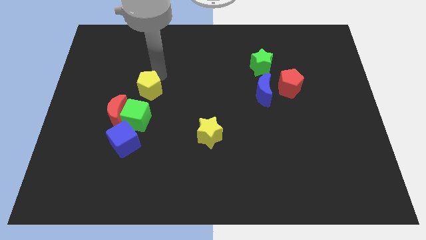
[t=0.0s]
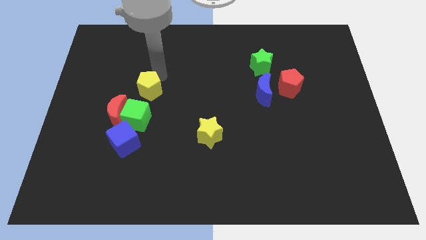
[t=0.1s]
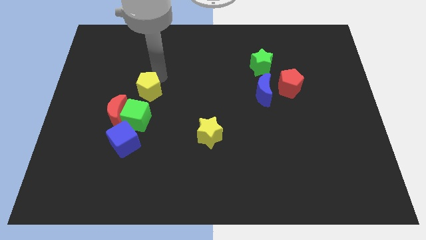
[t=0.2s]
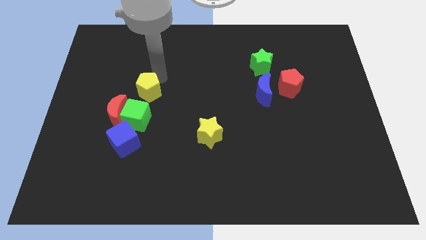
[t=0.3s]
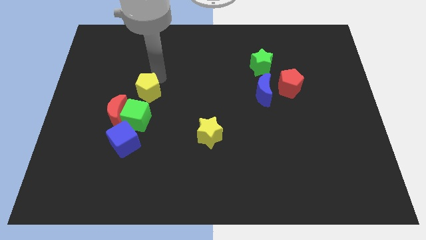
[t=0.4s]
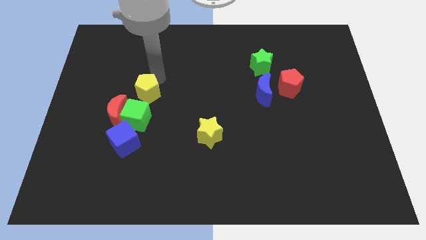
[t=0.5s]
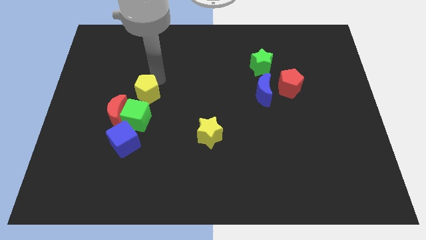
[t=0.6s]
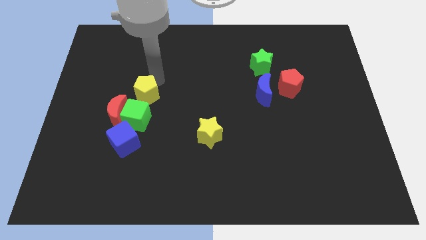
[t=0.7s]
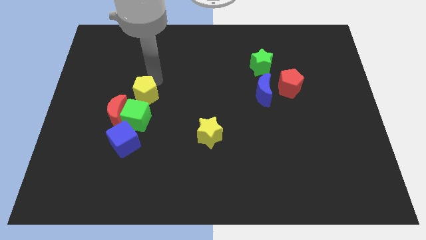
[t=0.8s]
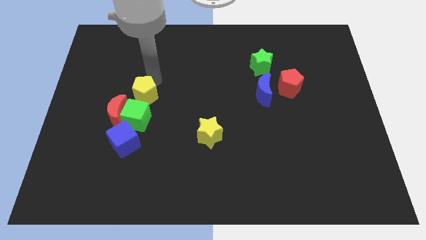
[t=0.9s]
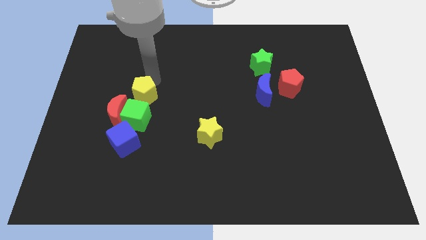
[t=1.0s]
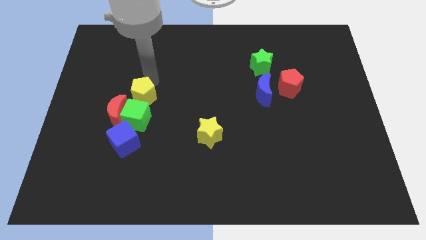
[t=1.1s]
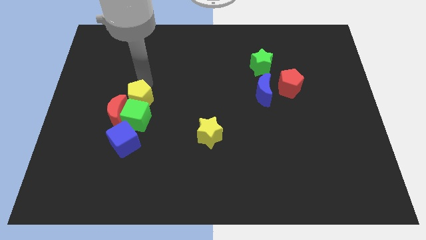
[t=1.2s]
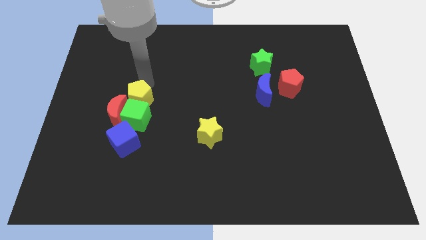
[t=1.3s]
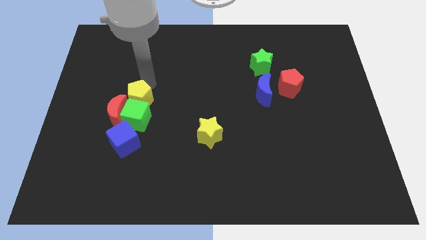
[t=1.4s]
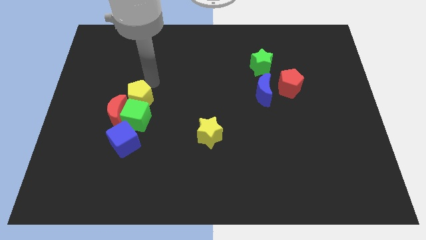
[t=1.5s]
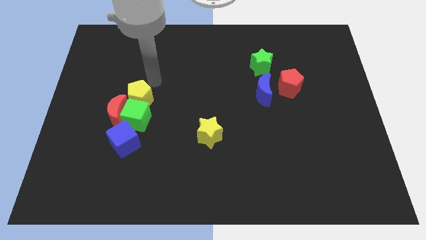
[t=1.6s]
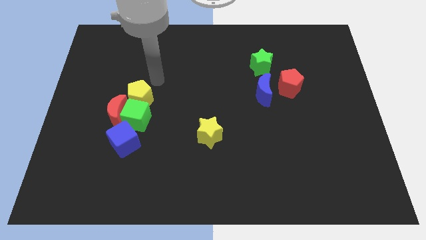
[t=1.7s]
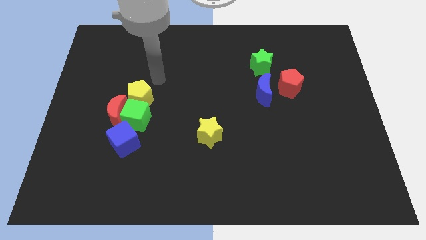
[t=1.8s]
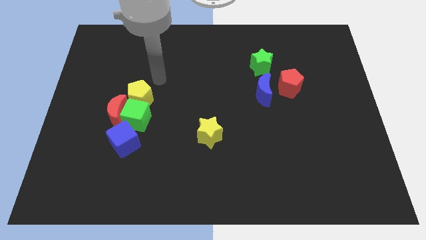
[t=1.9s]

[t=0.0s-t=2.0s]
move yellow pentagon close to the green cube

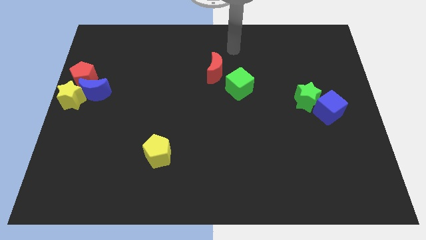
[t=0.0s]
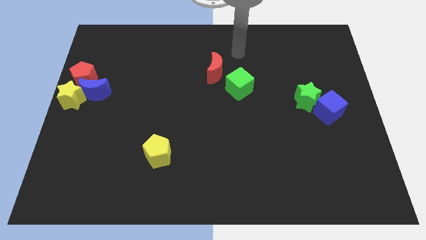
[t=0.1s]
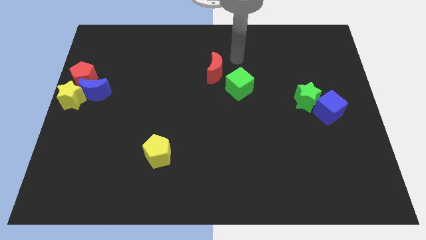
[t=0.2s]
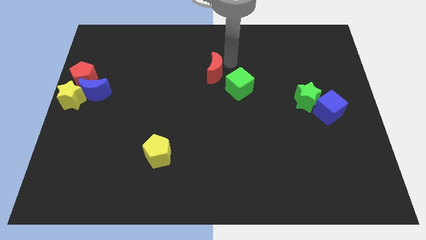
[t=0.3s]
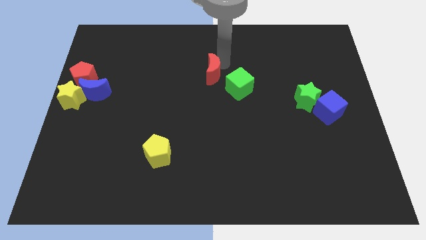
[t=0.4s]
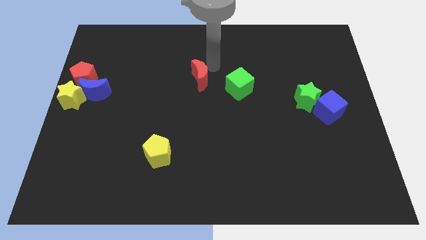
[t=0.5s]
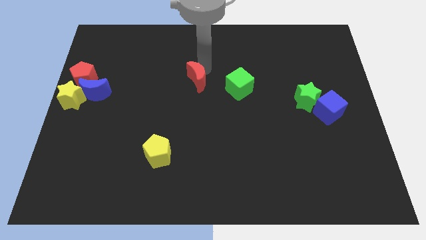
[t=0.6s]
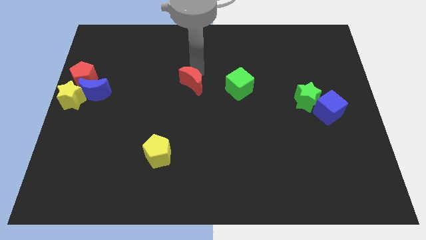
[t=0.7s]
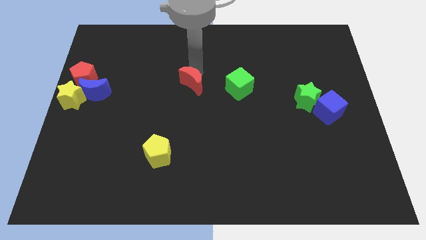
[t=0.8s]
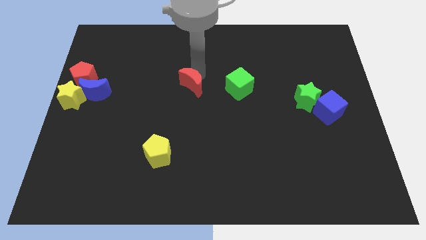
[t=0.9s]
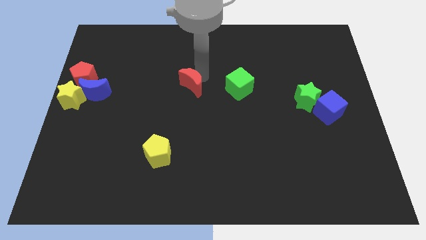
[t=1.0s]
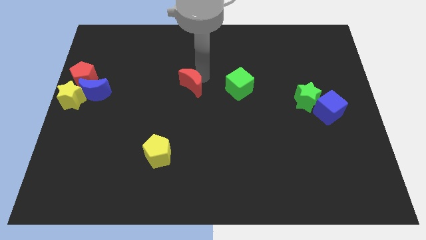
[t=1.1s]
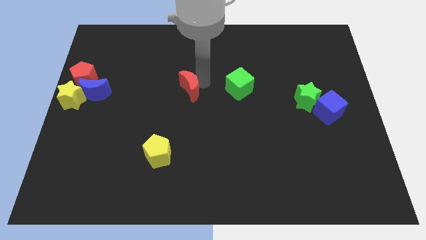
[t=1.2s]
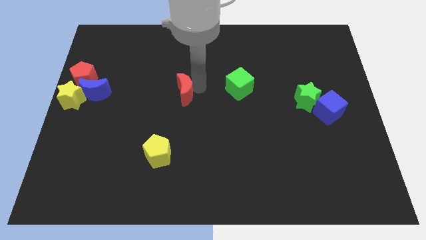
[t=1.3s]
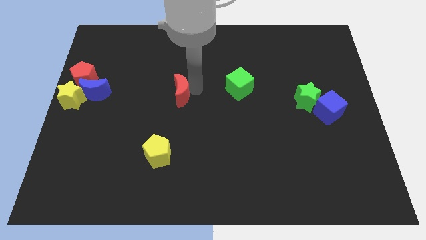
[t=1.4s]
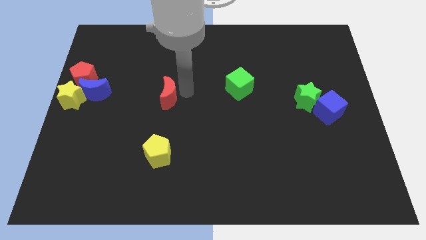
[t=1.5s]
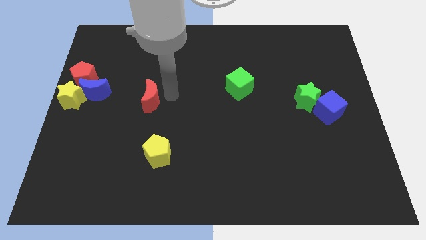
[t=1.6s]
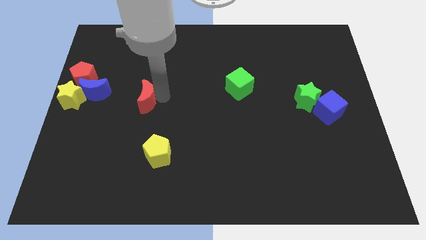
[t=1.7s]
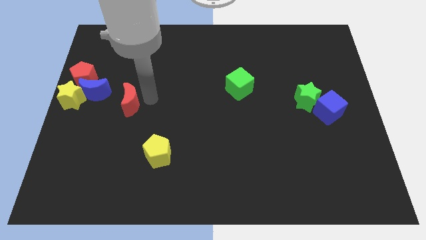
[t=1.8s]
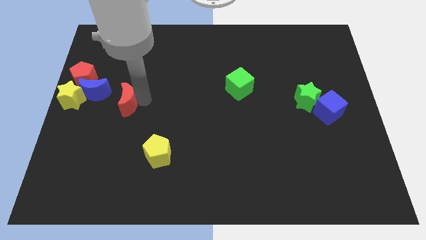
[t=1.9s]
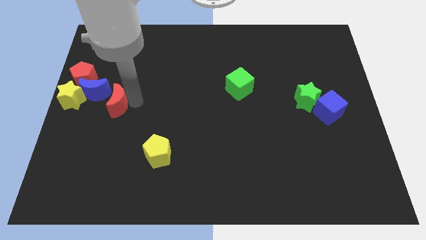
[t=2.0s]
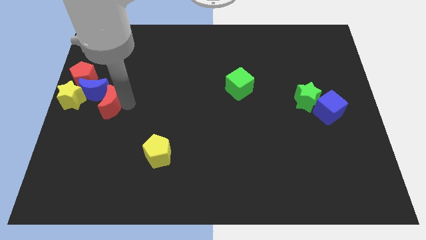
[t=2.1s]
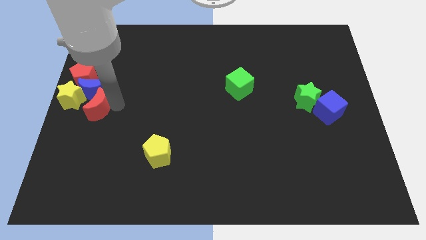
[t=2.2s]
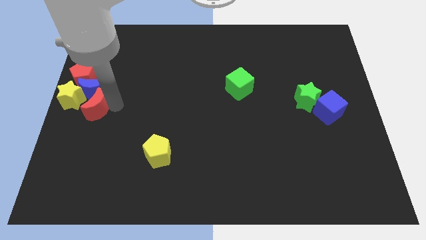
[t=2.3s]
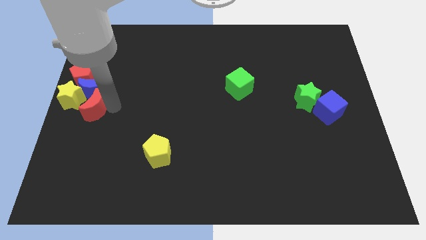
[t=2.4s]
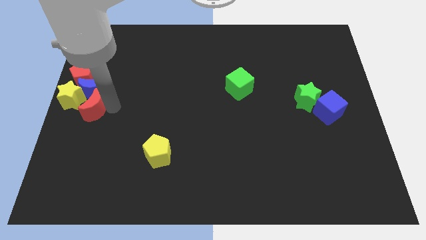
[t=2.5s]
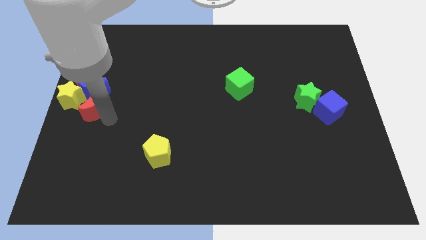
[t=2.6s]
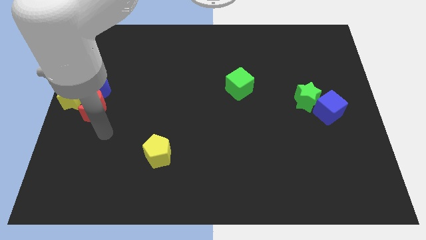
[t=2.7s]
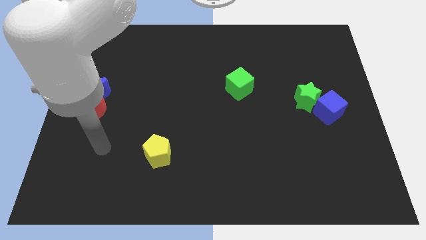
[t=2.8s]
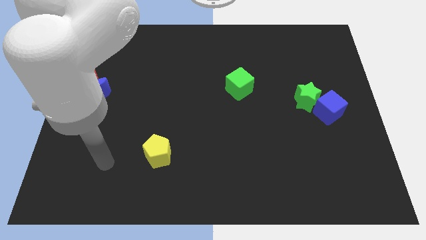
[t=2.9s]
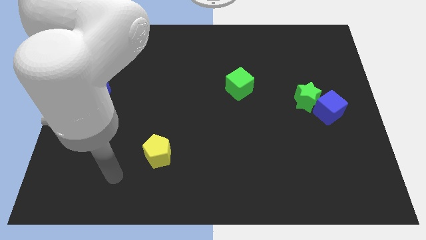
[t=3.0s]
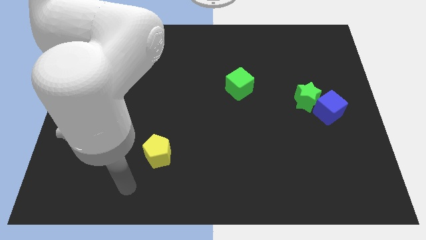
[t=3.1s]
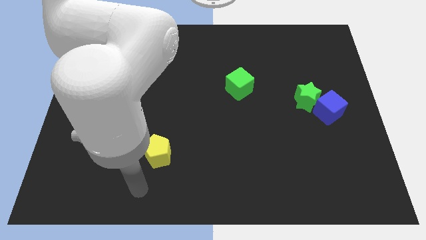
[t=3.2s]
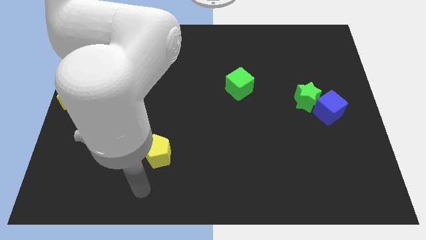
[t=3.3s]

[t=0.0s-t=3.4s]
place the red crescent below the blue crescent

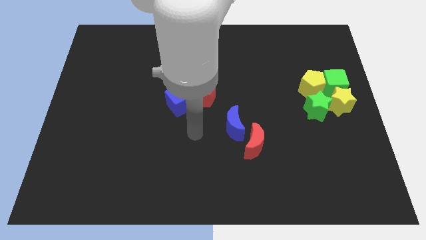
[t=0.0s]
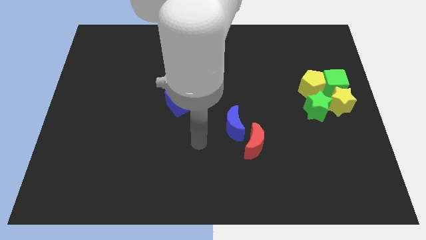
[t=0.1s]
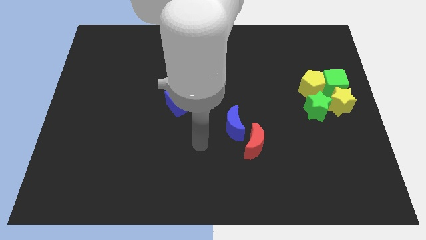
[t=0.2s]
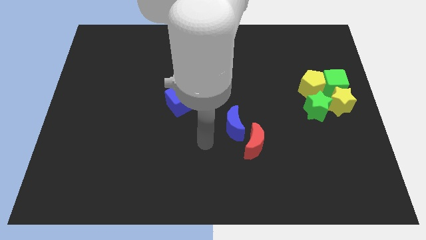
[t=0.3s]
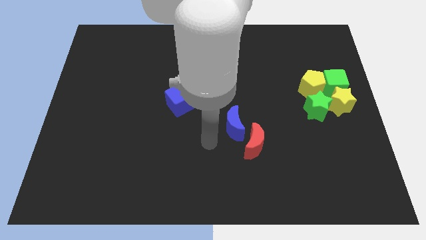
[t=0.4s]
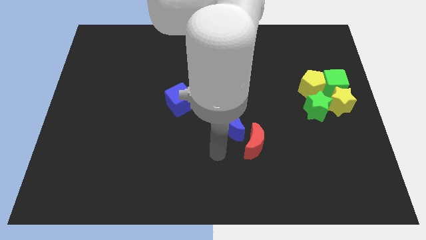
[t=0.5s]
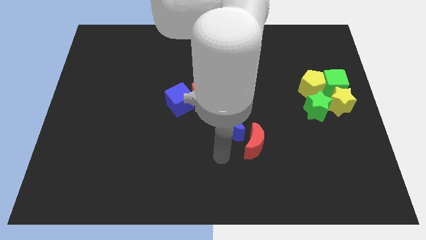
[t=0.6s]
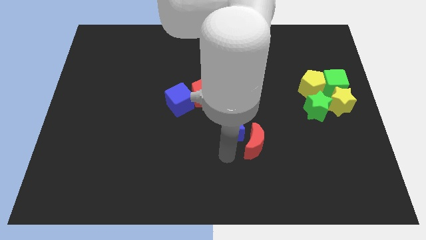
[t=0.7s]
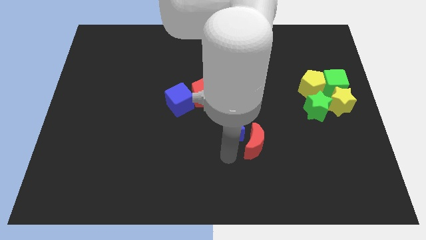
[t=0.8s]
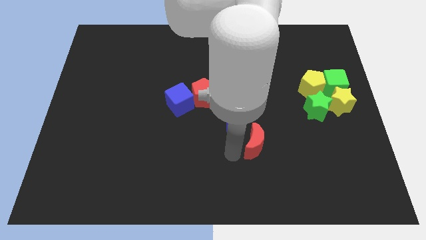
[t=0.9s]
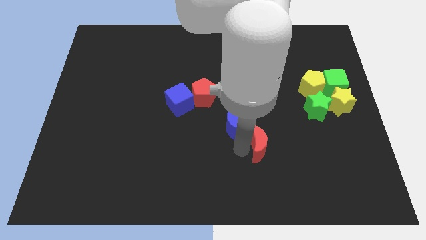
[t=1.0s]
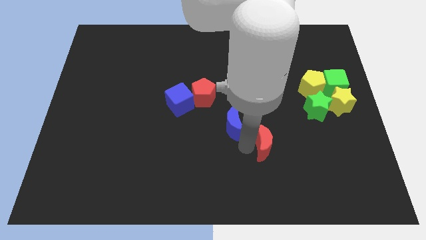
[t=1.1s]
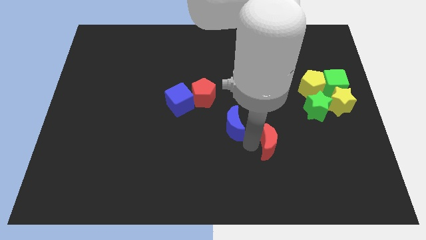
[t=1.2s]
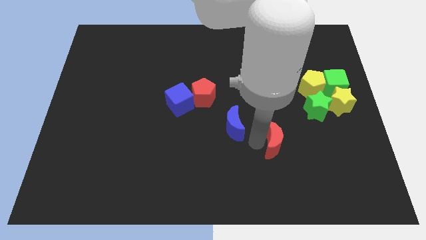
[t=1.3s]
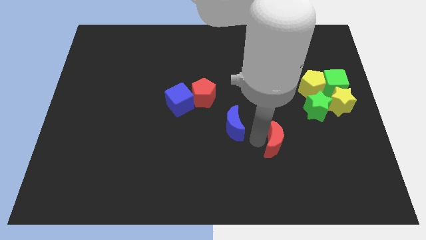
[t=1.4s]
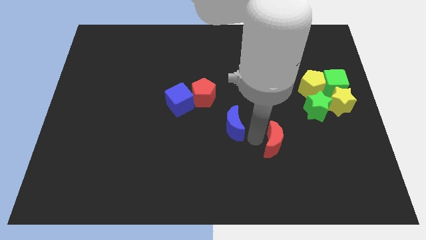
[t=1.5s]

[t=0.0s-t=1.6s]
move the red crescent slightly to the right

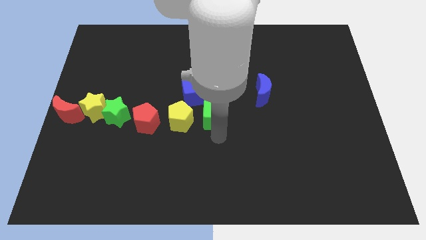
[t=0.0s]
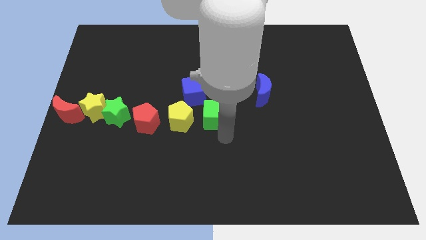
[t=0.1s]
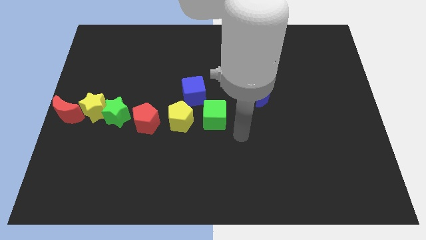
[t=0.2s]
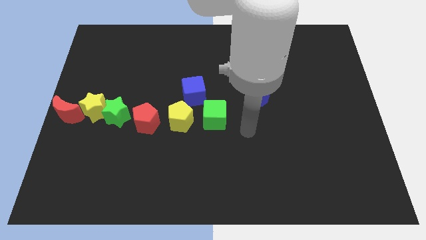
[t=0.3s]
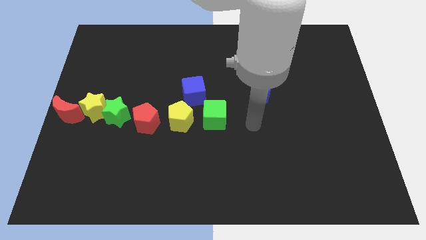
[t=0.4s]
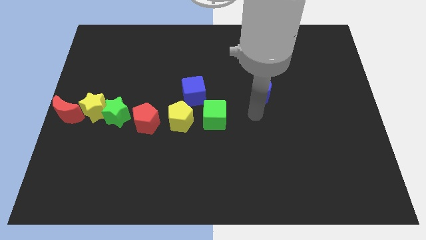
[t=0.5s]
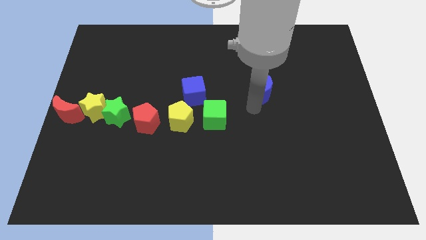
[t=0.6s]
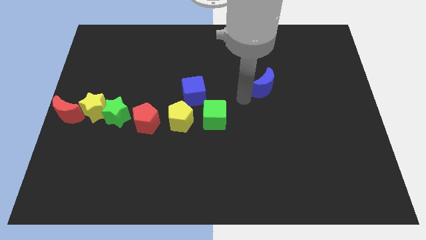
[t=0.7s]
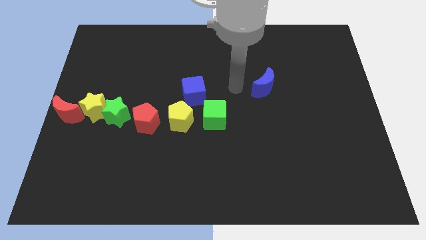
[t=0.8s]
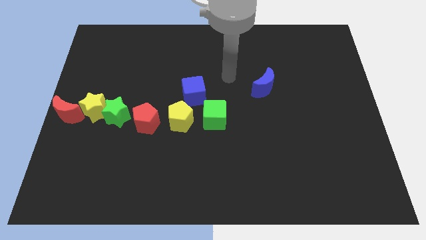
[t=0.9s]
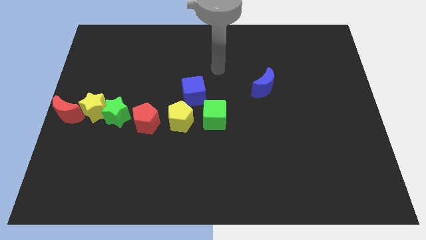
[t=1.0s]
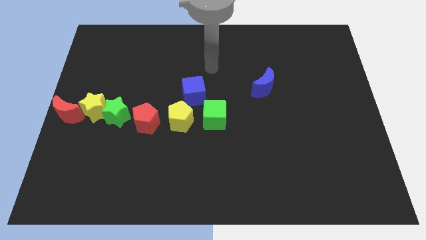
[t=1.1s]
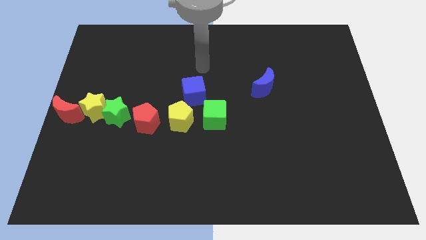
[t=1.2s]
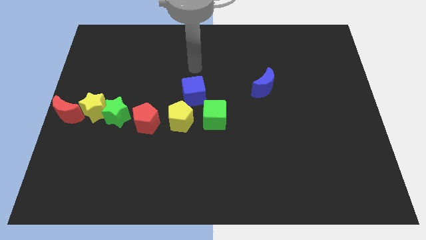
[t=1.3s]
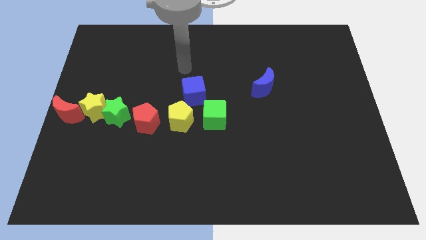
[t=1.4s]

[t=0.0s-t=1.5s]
move your arm to the top of blue cube

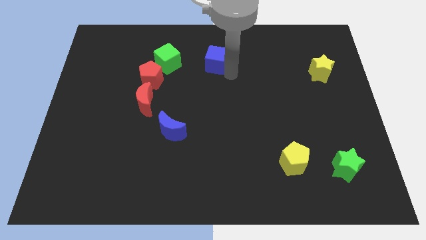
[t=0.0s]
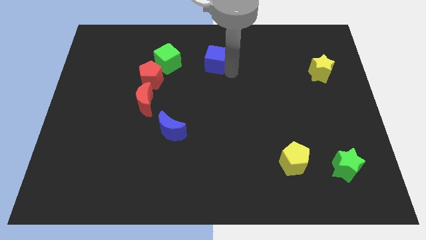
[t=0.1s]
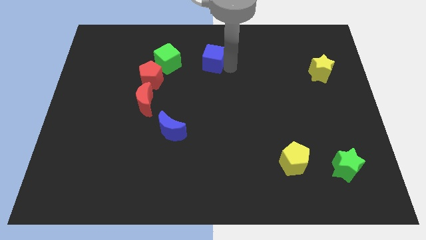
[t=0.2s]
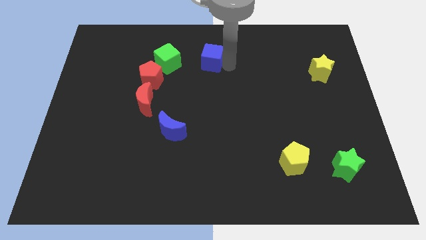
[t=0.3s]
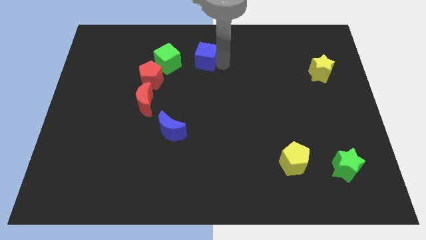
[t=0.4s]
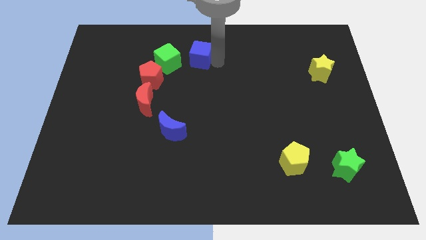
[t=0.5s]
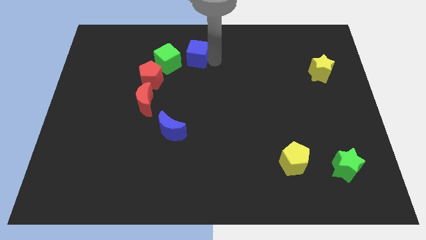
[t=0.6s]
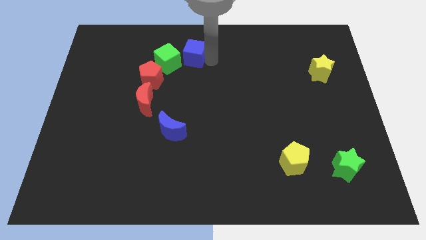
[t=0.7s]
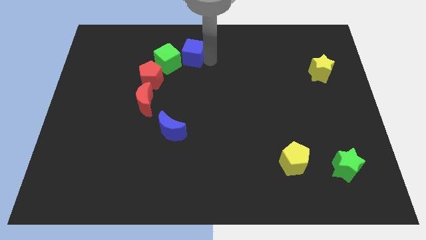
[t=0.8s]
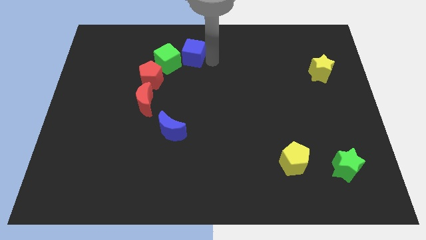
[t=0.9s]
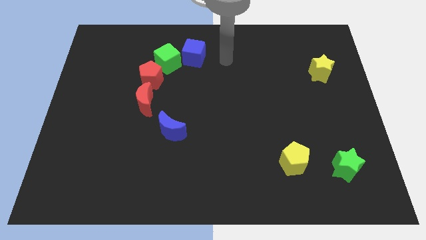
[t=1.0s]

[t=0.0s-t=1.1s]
place the blue cube to the right side of the green cube
